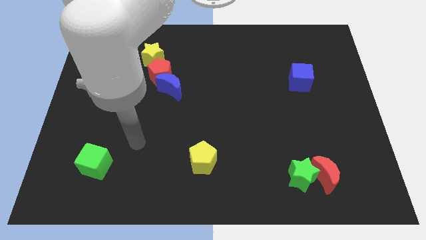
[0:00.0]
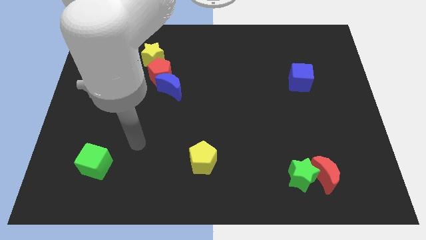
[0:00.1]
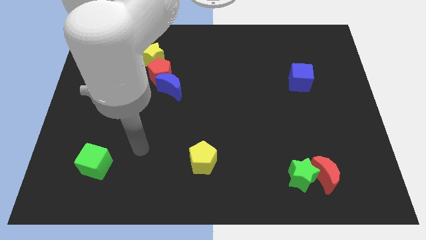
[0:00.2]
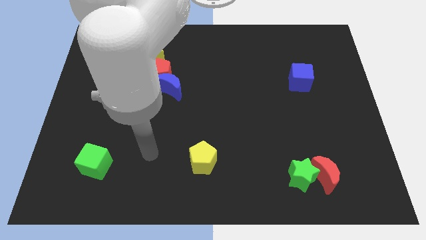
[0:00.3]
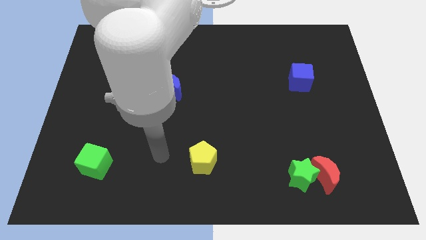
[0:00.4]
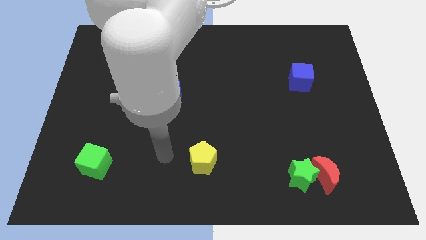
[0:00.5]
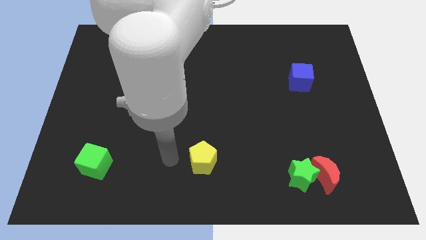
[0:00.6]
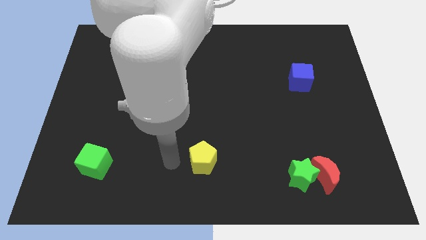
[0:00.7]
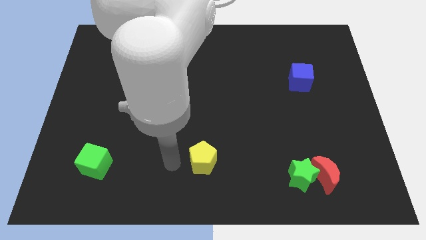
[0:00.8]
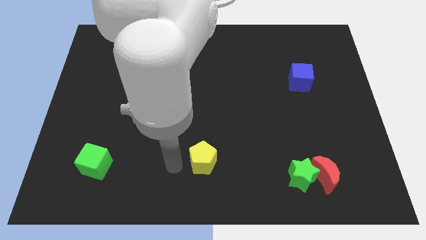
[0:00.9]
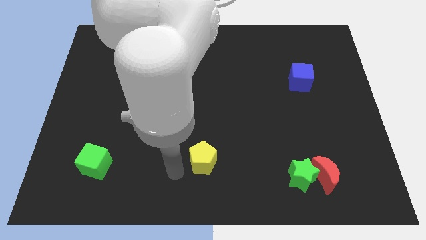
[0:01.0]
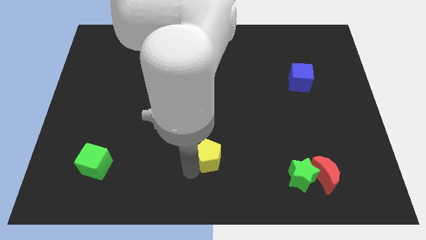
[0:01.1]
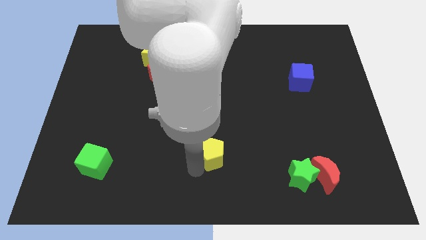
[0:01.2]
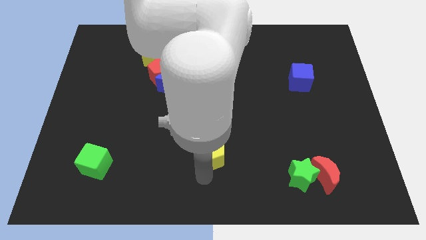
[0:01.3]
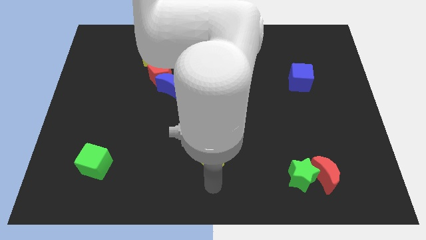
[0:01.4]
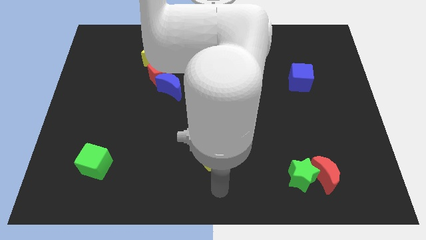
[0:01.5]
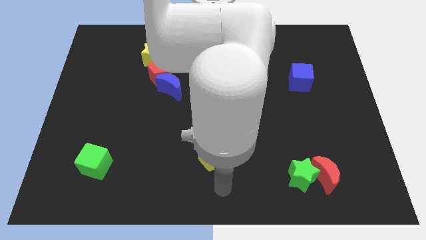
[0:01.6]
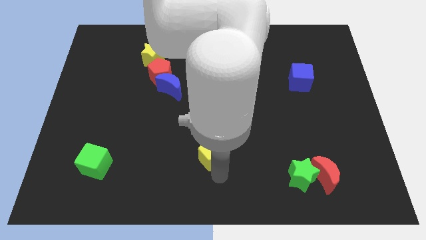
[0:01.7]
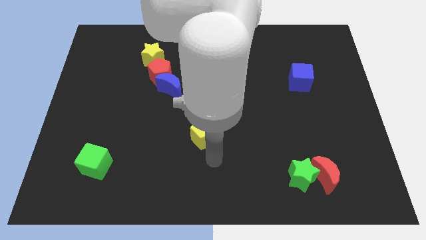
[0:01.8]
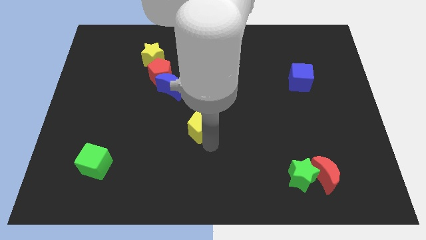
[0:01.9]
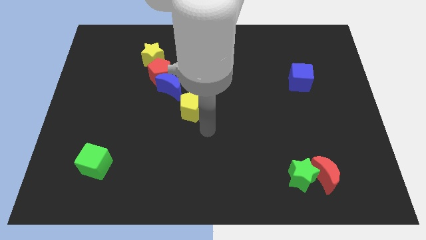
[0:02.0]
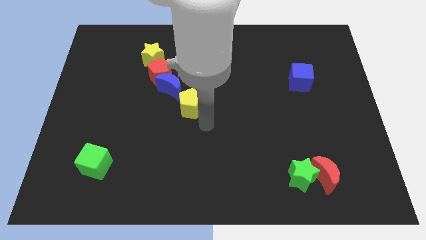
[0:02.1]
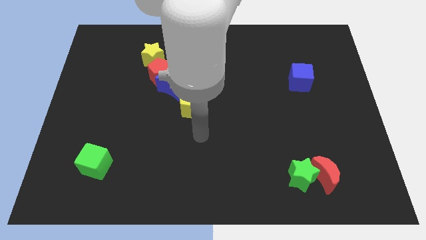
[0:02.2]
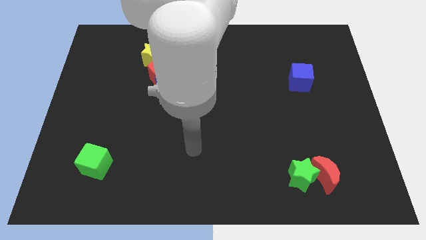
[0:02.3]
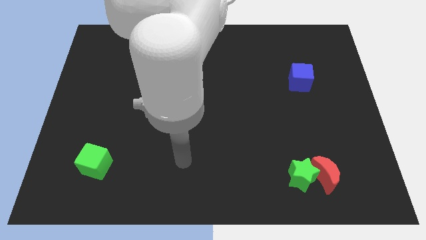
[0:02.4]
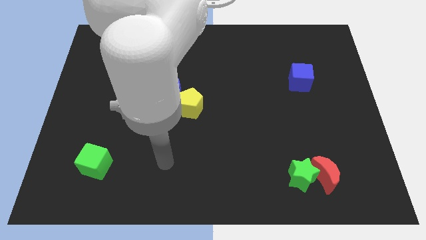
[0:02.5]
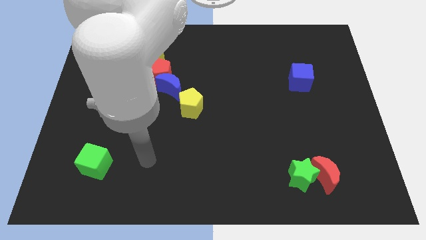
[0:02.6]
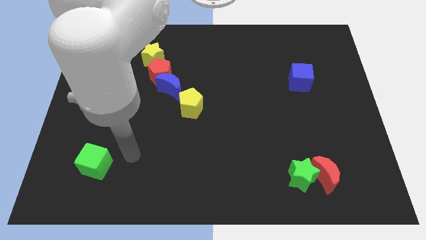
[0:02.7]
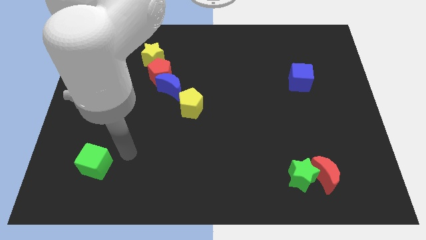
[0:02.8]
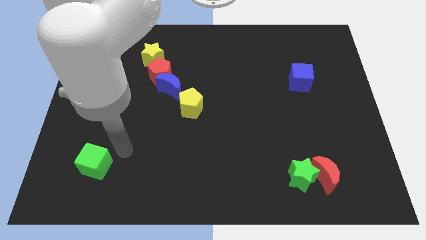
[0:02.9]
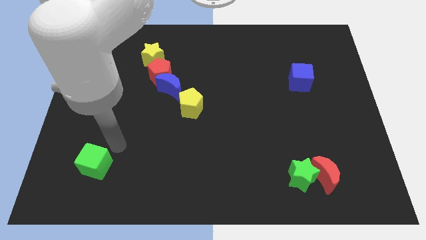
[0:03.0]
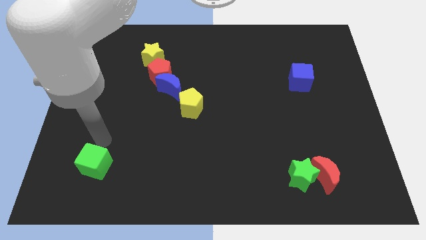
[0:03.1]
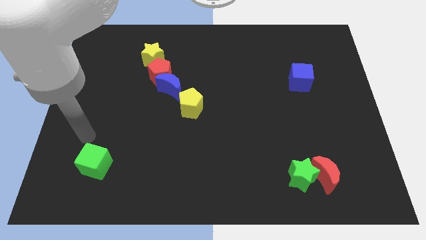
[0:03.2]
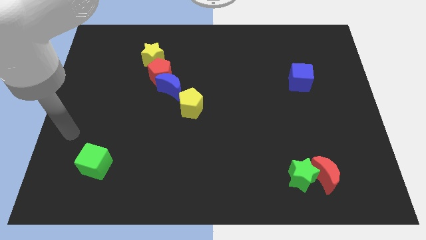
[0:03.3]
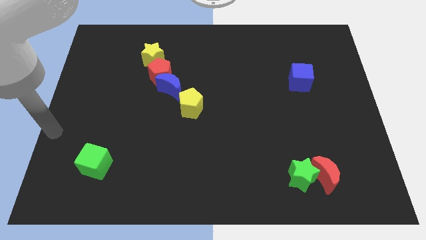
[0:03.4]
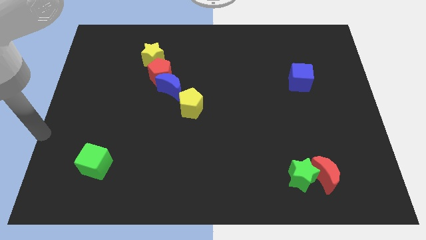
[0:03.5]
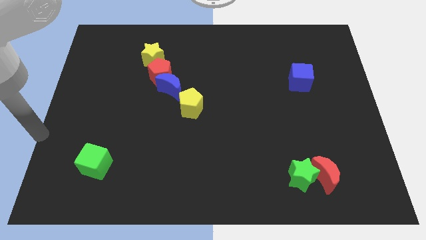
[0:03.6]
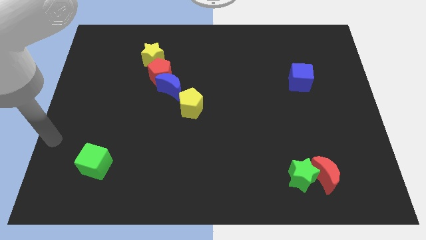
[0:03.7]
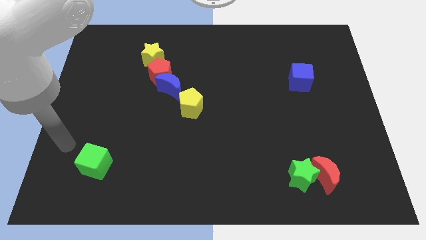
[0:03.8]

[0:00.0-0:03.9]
move the yellow pentagon to the bottom right side of the blue crescent

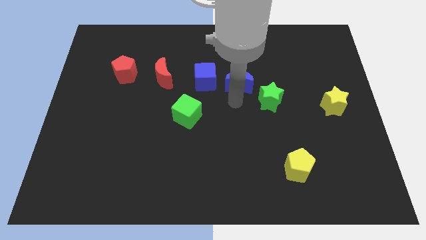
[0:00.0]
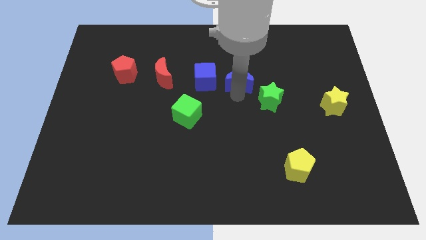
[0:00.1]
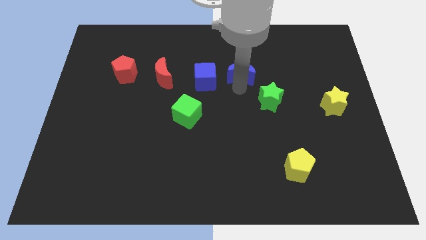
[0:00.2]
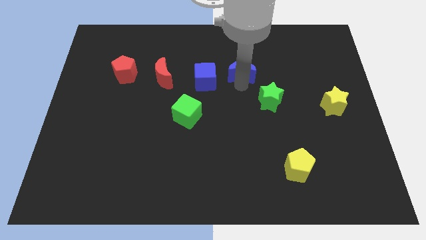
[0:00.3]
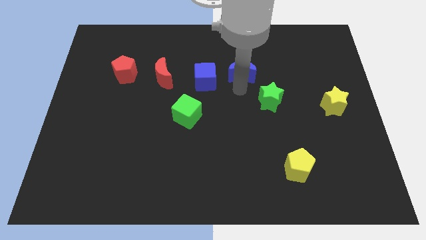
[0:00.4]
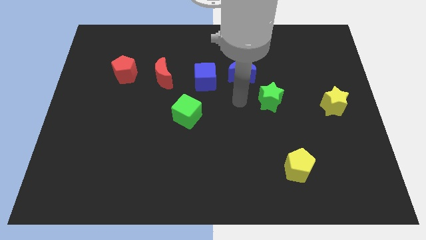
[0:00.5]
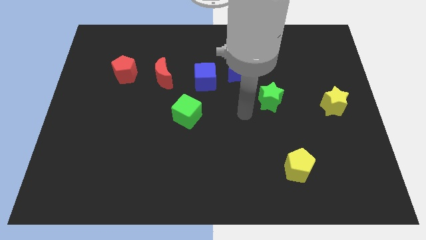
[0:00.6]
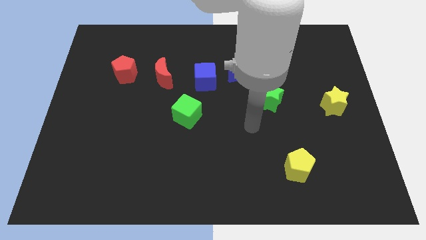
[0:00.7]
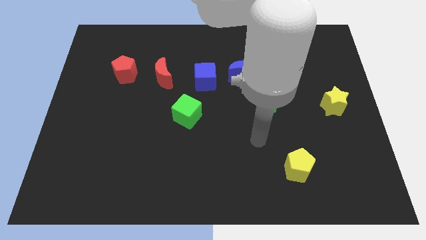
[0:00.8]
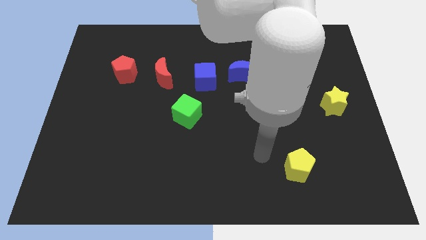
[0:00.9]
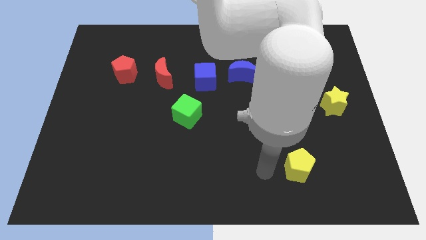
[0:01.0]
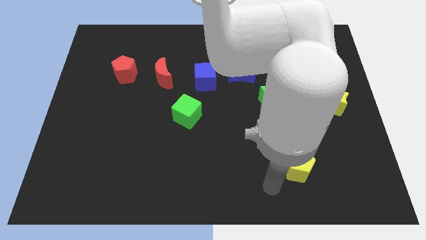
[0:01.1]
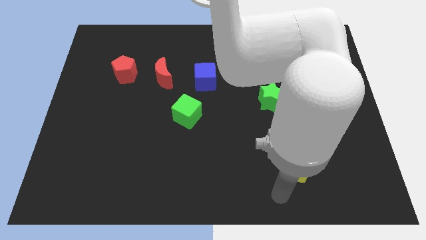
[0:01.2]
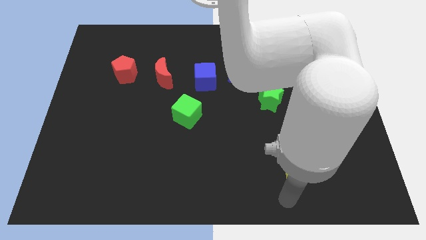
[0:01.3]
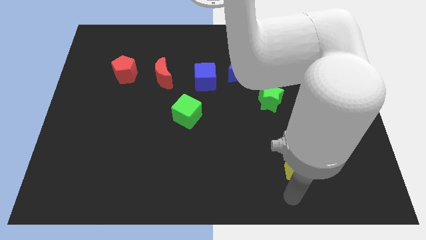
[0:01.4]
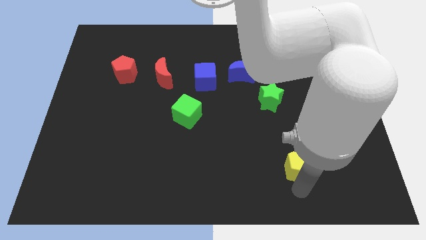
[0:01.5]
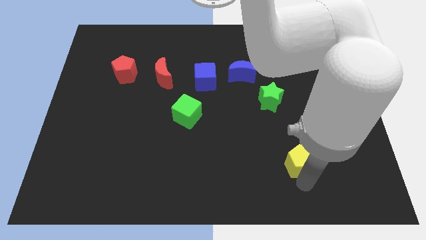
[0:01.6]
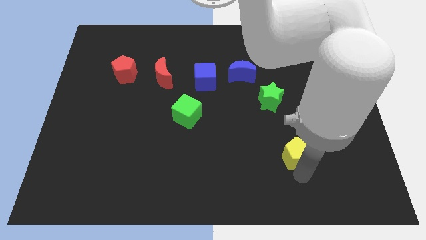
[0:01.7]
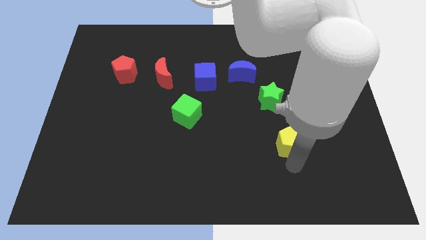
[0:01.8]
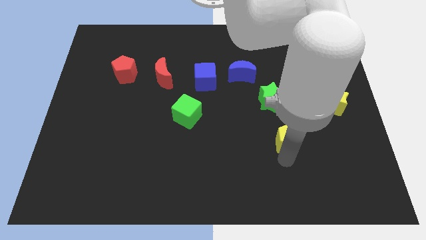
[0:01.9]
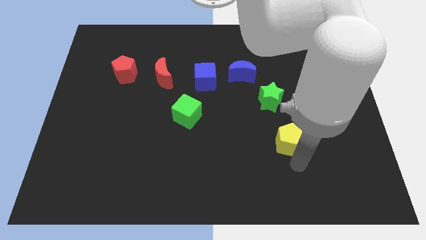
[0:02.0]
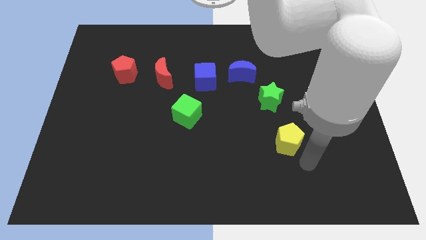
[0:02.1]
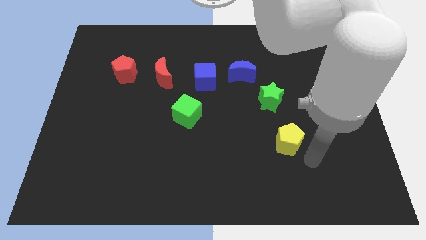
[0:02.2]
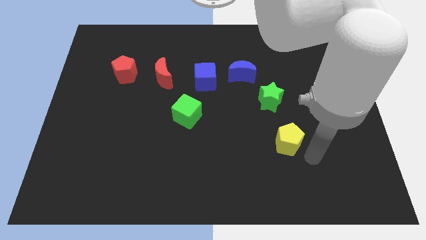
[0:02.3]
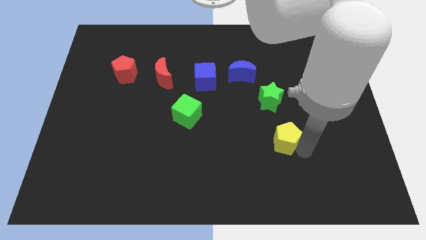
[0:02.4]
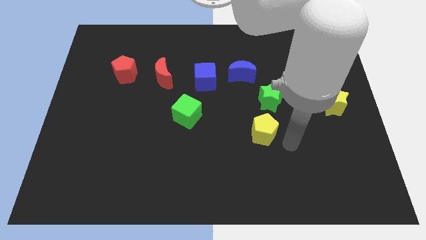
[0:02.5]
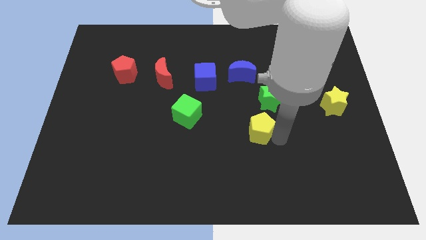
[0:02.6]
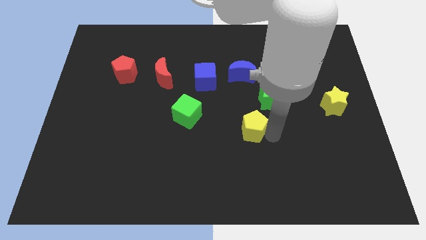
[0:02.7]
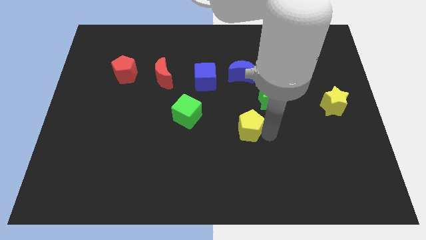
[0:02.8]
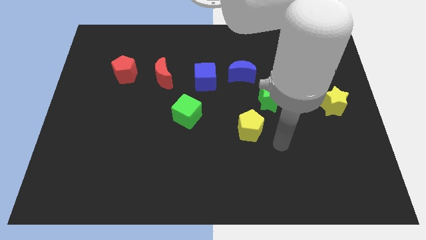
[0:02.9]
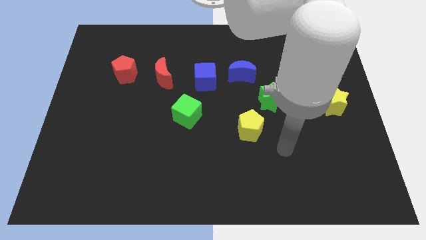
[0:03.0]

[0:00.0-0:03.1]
slide the yellow pentagon towards the green cube

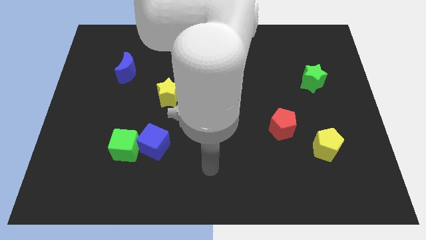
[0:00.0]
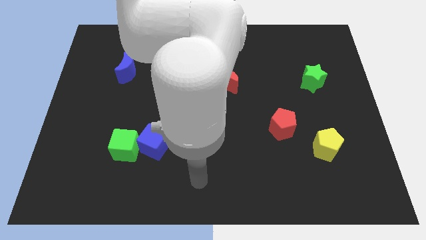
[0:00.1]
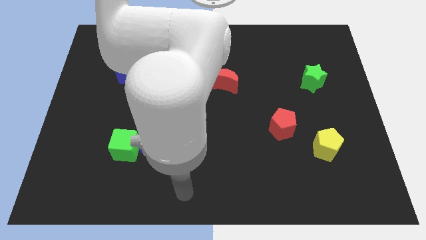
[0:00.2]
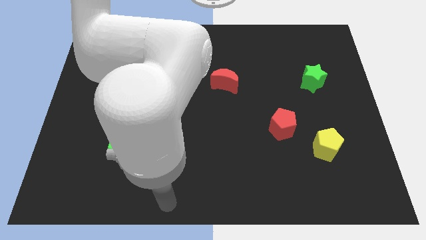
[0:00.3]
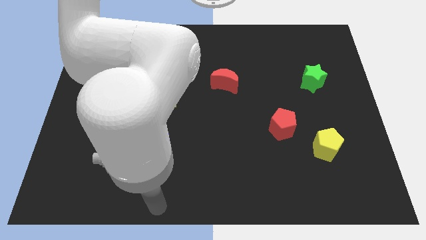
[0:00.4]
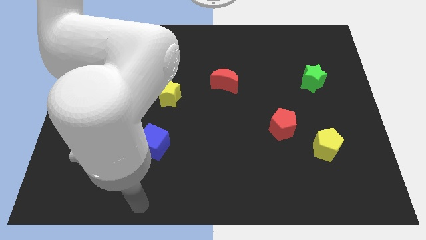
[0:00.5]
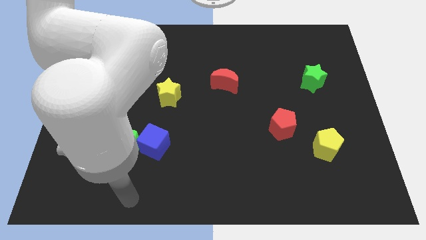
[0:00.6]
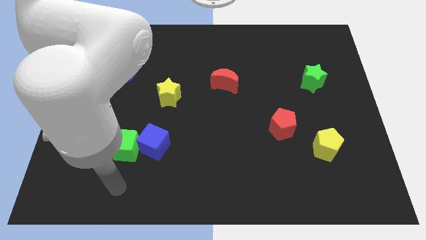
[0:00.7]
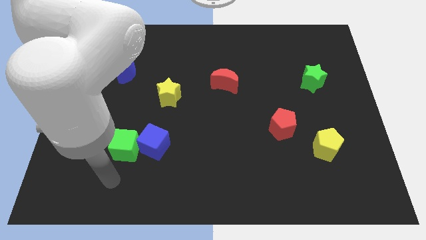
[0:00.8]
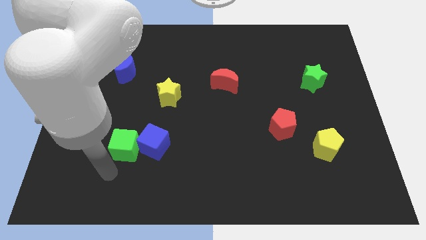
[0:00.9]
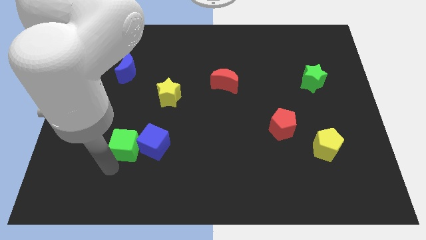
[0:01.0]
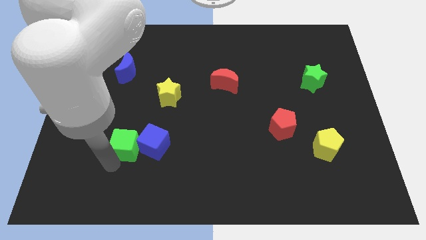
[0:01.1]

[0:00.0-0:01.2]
move your hand close to the green cube

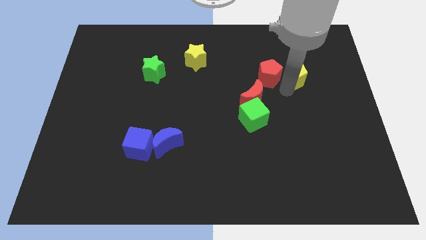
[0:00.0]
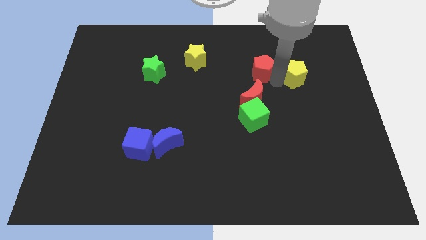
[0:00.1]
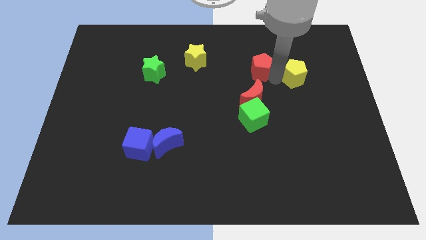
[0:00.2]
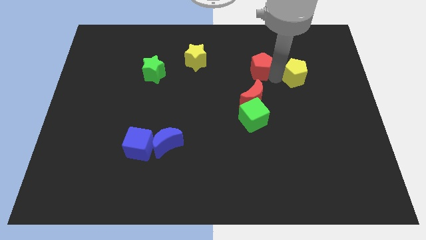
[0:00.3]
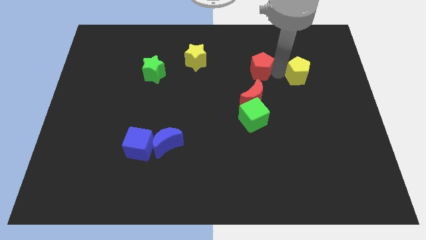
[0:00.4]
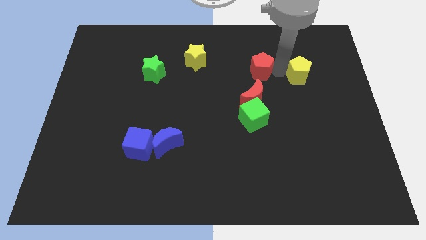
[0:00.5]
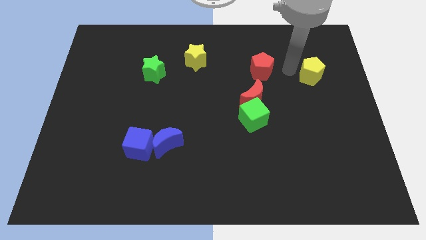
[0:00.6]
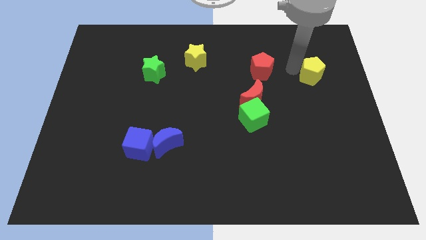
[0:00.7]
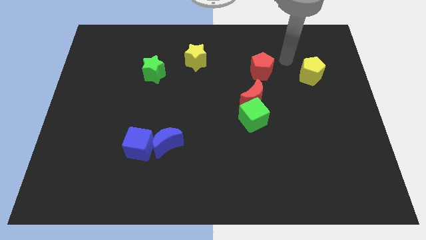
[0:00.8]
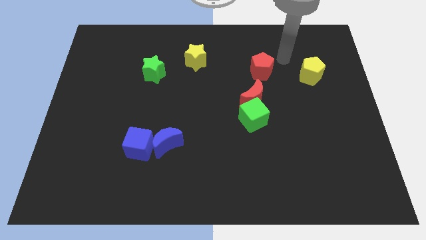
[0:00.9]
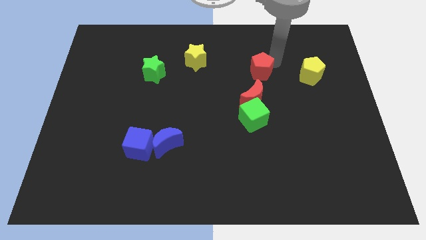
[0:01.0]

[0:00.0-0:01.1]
separate the yellow pentagon from the group of blocks
